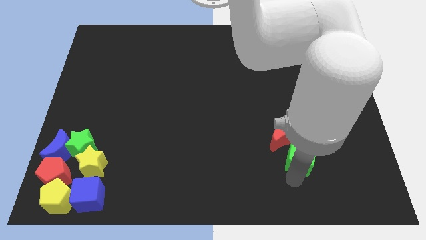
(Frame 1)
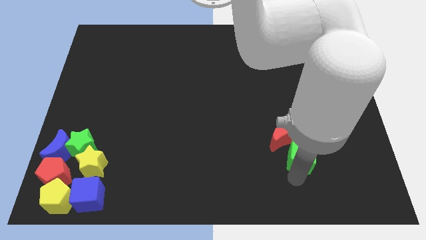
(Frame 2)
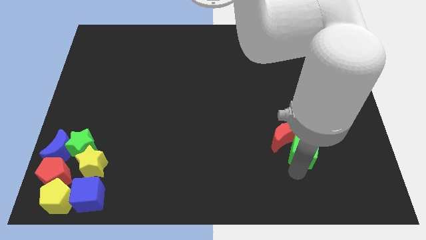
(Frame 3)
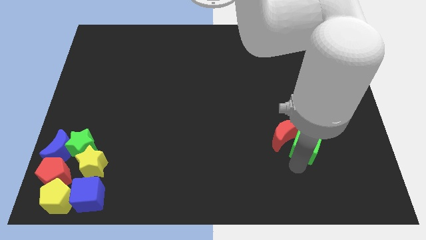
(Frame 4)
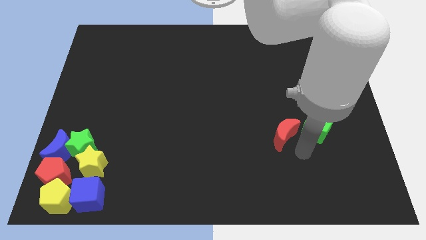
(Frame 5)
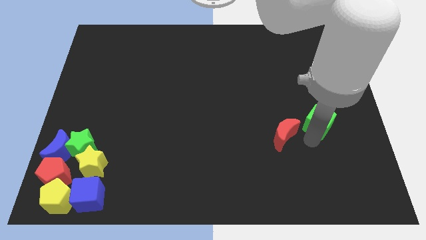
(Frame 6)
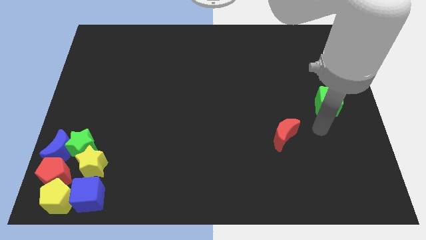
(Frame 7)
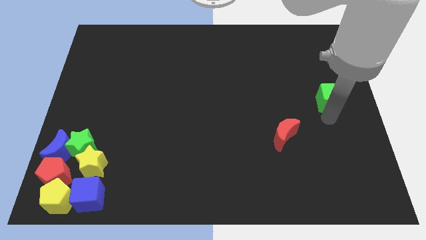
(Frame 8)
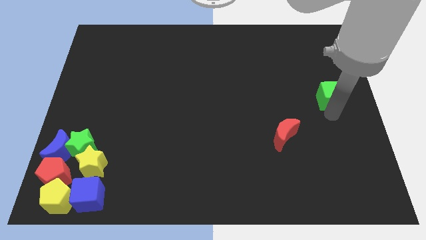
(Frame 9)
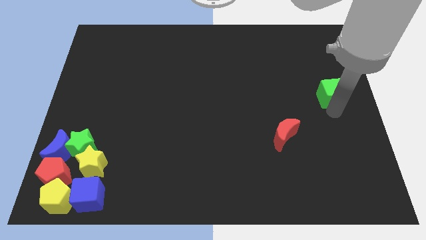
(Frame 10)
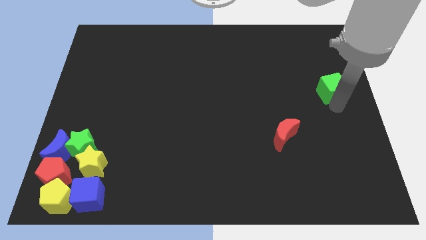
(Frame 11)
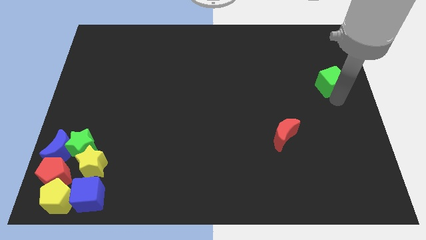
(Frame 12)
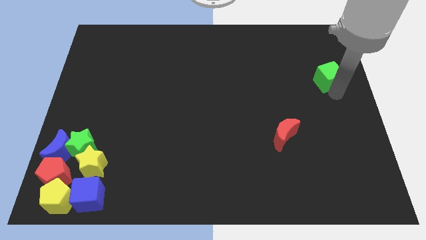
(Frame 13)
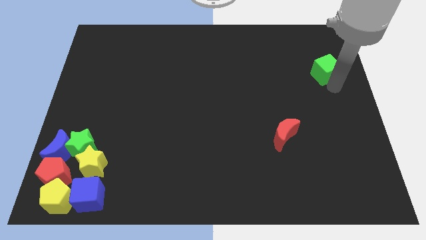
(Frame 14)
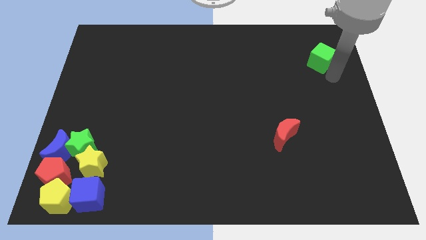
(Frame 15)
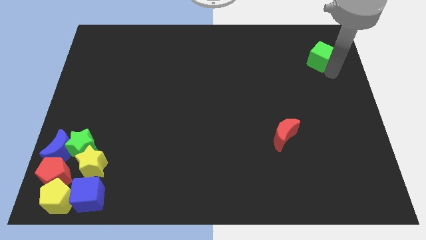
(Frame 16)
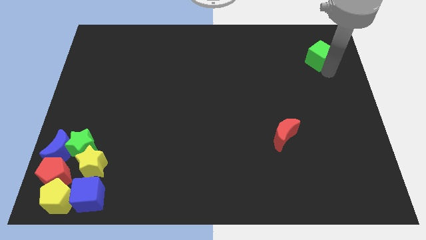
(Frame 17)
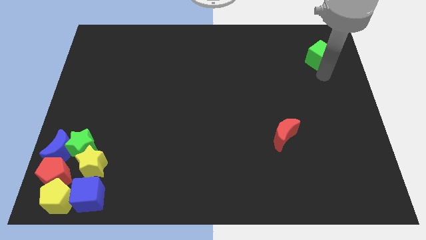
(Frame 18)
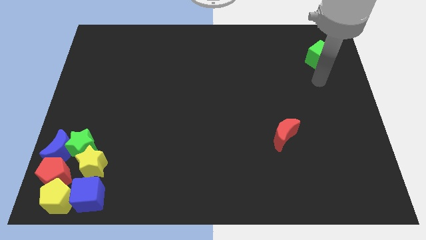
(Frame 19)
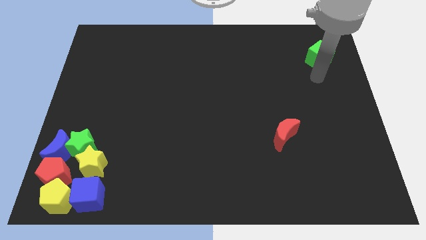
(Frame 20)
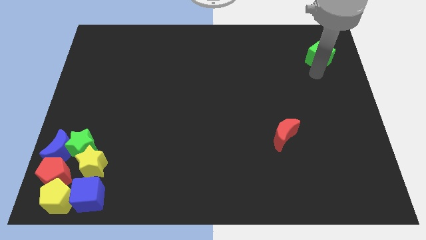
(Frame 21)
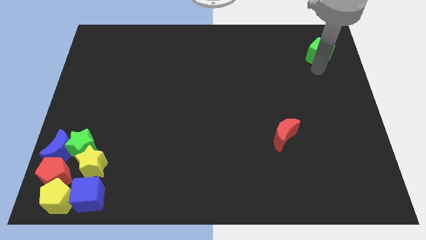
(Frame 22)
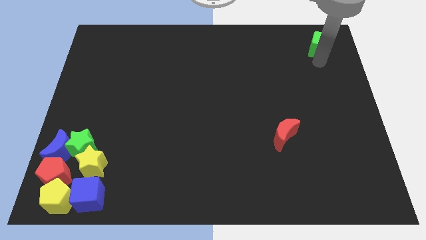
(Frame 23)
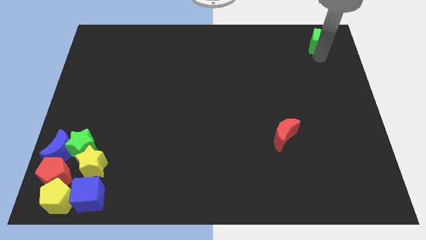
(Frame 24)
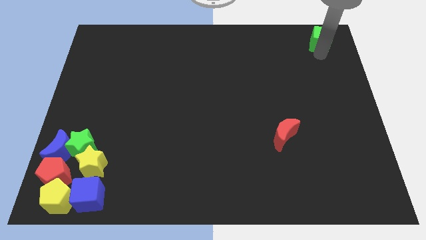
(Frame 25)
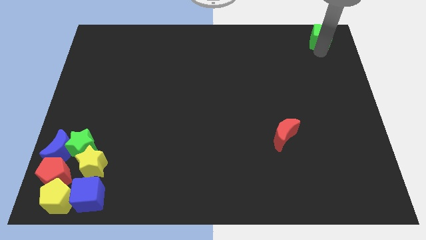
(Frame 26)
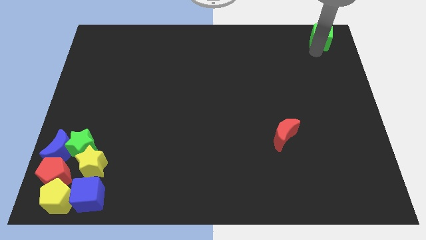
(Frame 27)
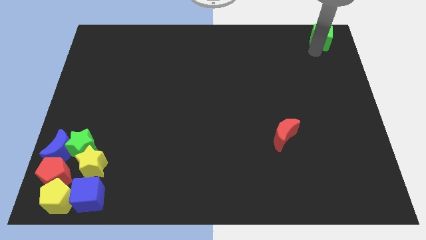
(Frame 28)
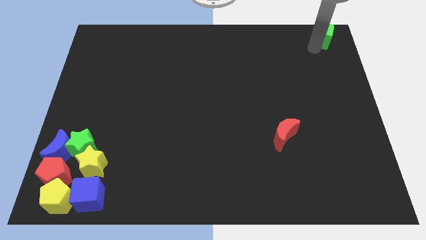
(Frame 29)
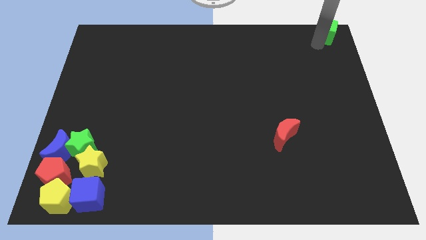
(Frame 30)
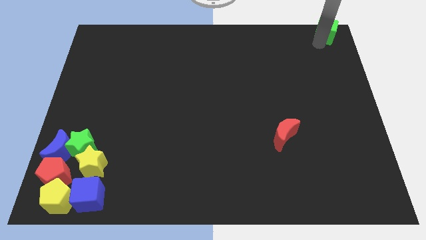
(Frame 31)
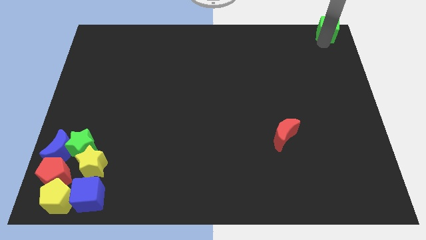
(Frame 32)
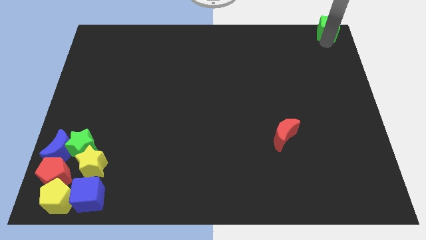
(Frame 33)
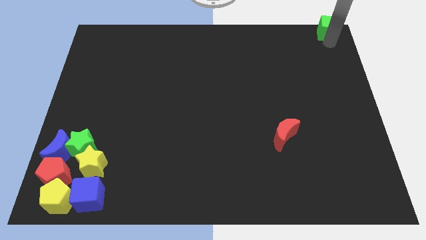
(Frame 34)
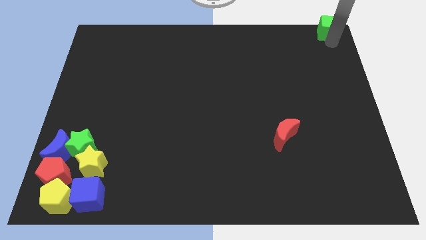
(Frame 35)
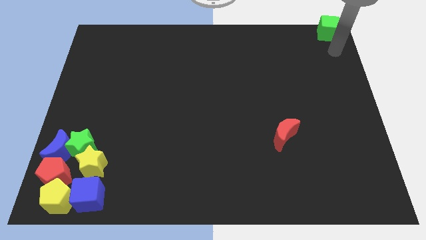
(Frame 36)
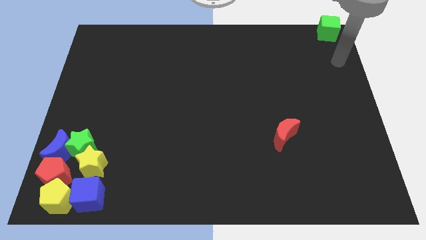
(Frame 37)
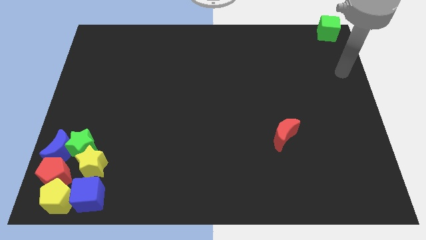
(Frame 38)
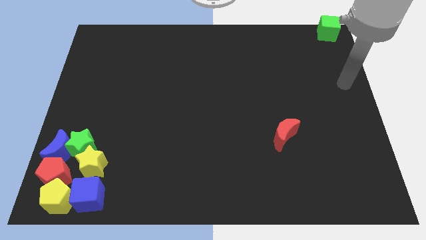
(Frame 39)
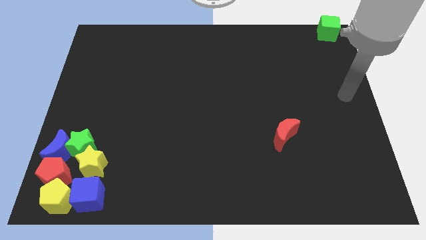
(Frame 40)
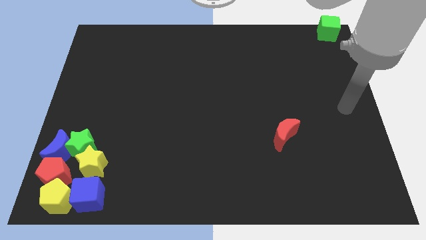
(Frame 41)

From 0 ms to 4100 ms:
push green cube to the top right

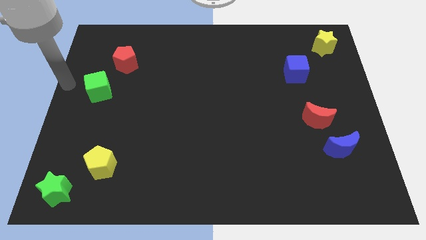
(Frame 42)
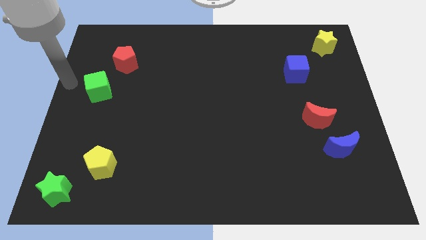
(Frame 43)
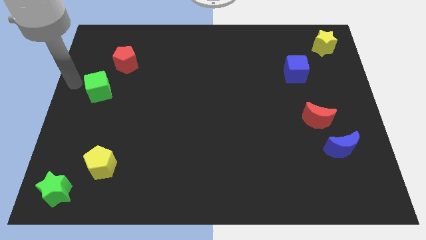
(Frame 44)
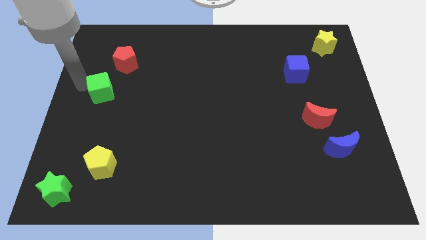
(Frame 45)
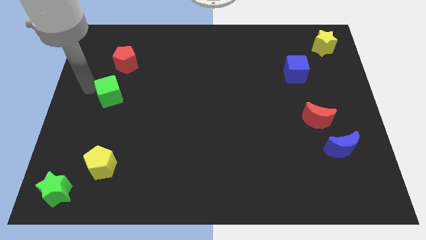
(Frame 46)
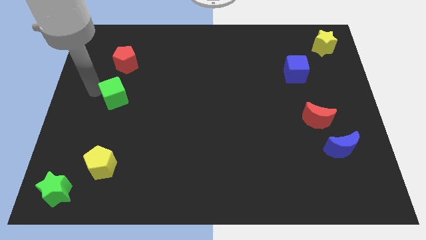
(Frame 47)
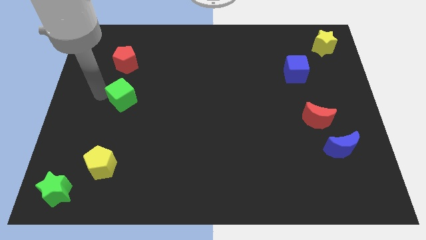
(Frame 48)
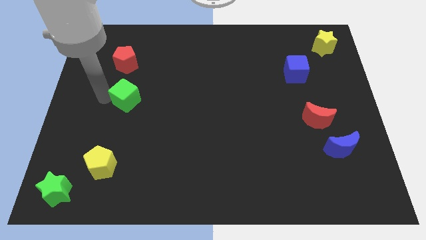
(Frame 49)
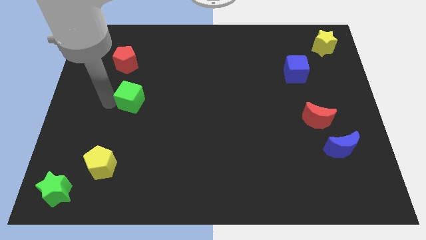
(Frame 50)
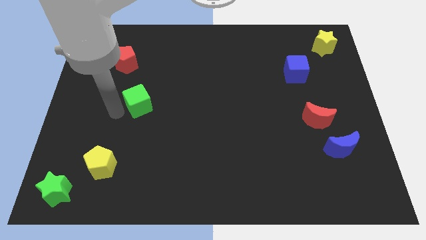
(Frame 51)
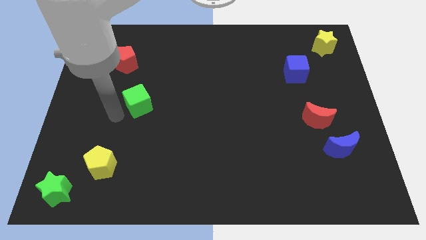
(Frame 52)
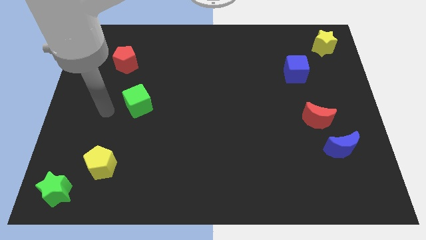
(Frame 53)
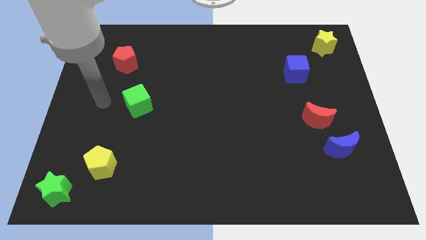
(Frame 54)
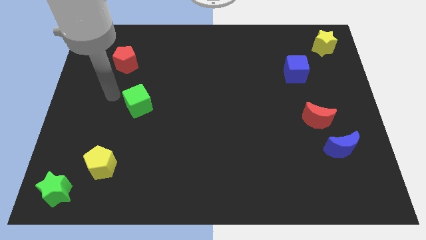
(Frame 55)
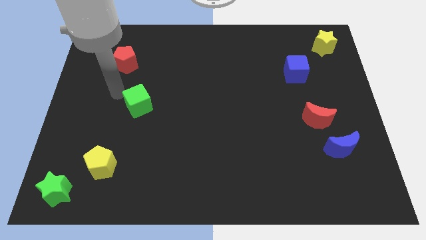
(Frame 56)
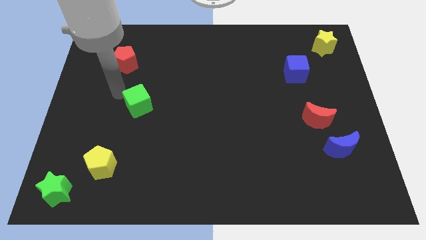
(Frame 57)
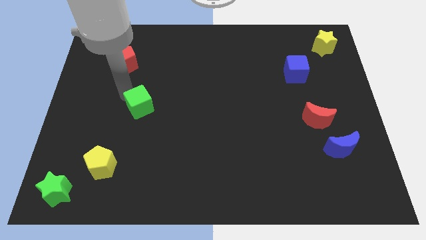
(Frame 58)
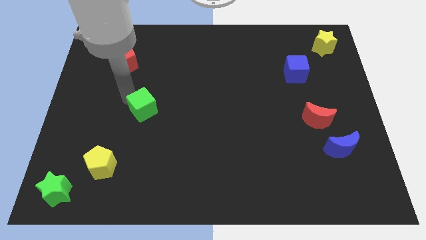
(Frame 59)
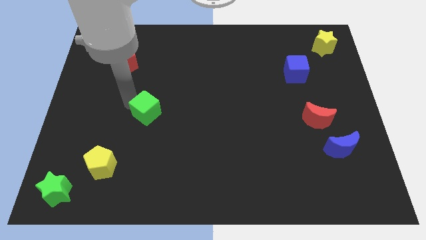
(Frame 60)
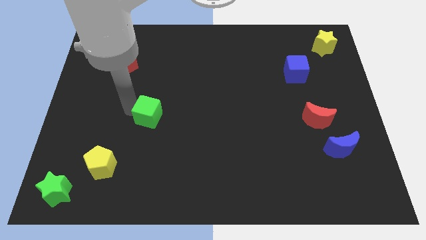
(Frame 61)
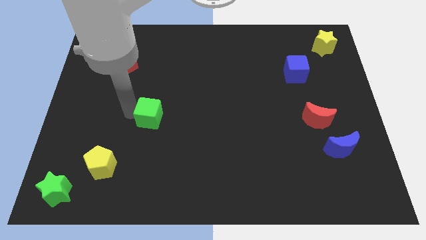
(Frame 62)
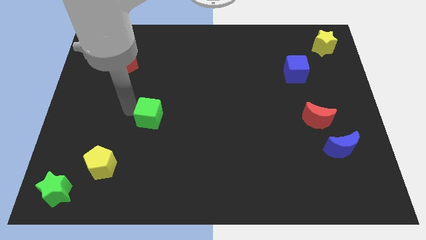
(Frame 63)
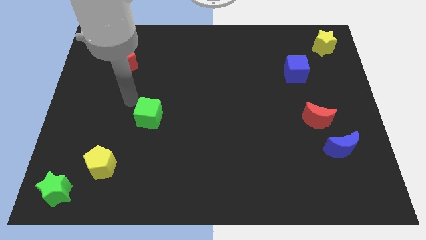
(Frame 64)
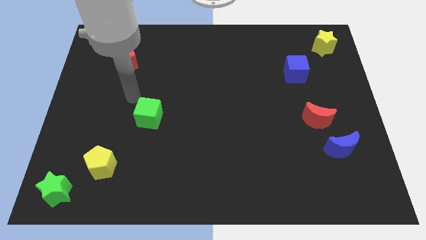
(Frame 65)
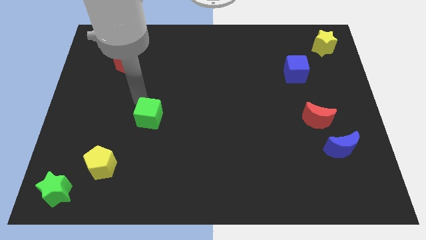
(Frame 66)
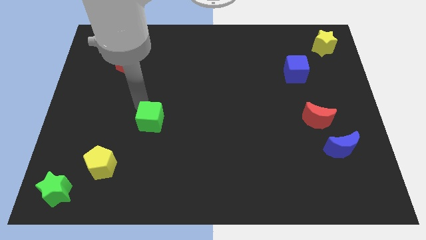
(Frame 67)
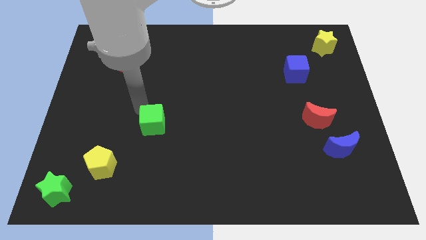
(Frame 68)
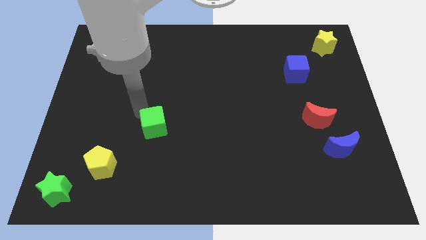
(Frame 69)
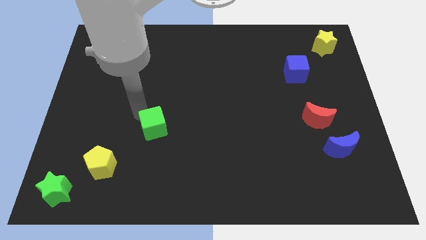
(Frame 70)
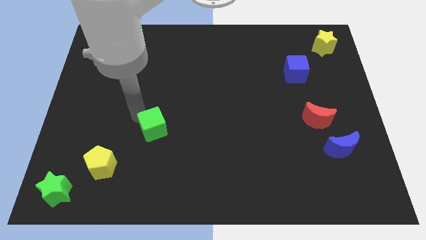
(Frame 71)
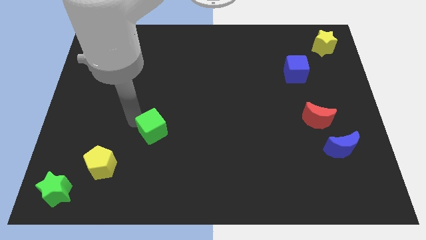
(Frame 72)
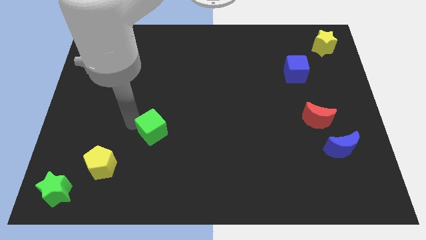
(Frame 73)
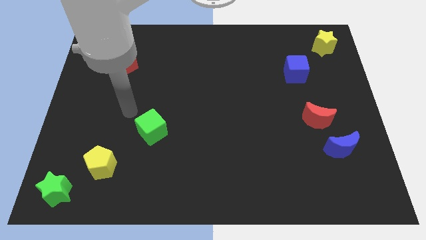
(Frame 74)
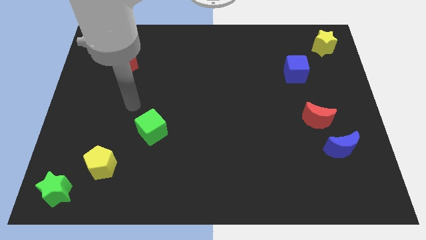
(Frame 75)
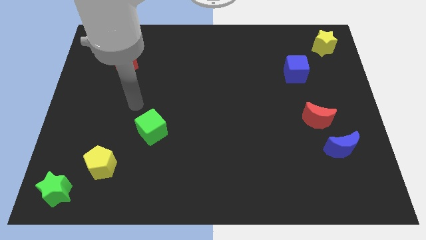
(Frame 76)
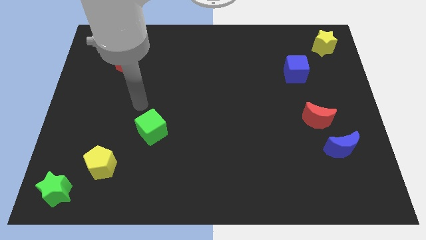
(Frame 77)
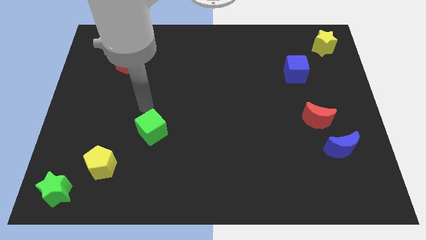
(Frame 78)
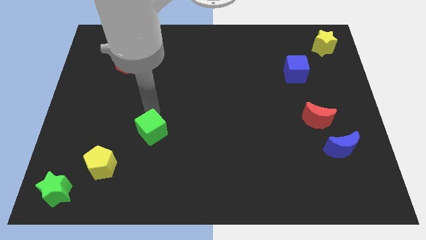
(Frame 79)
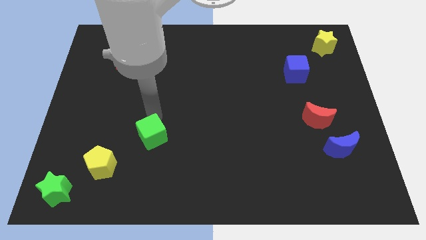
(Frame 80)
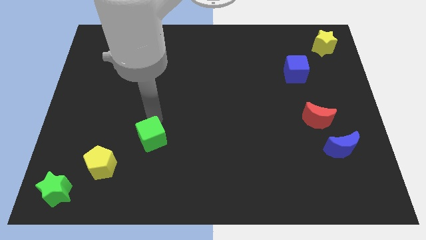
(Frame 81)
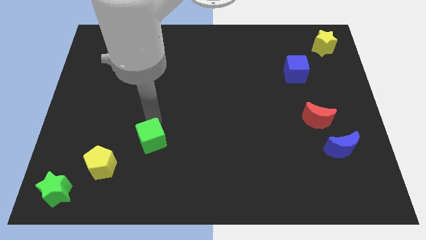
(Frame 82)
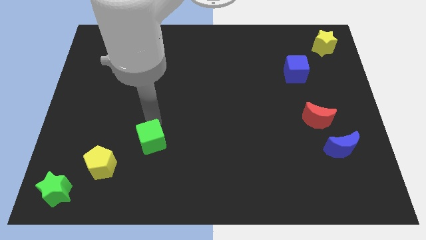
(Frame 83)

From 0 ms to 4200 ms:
place the green cube diagonally to yellow pentagon

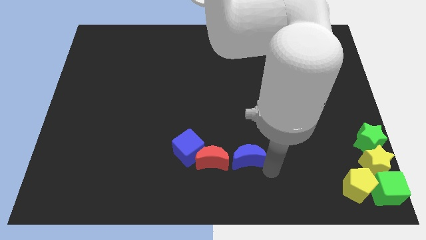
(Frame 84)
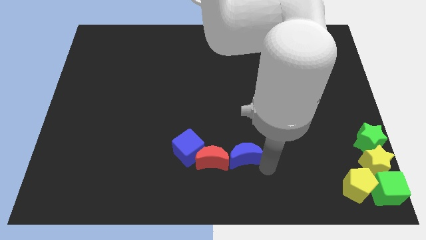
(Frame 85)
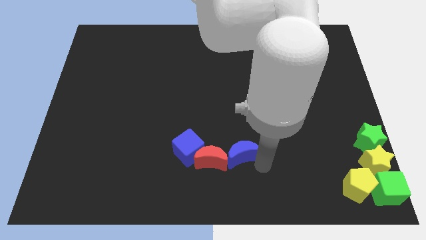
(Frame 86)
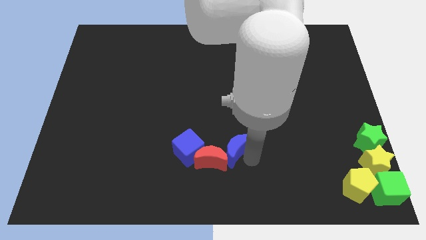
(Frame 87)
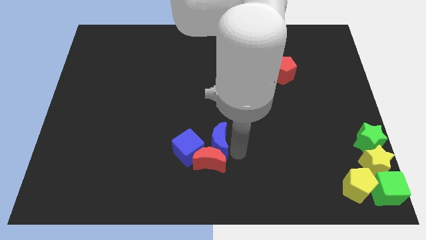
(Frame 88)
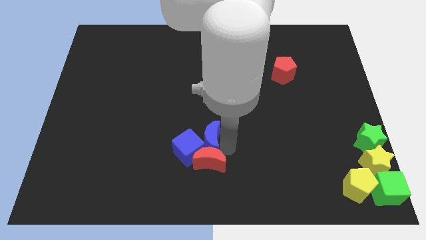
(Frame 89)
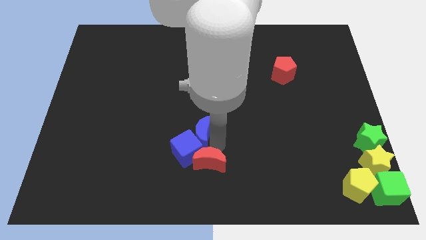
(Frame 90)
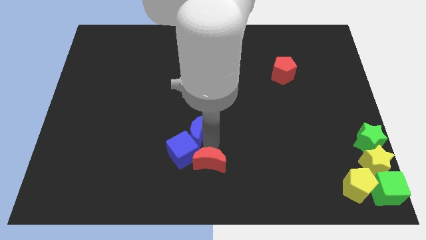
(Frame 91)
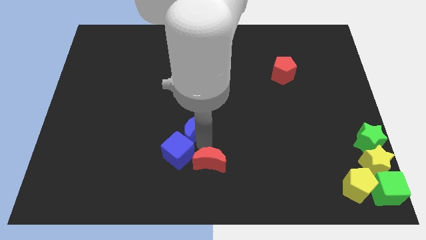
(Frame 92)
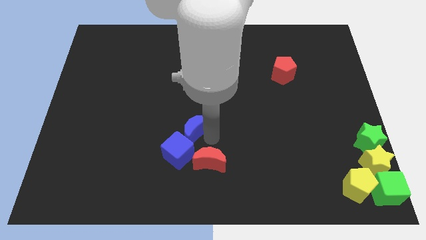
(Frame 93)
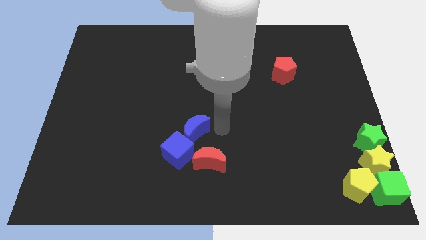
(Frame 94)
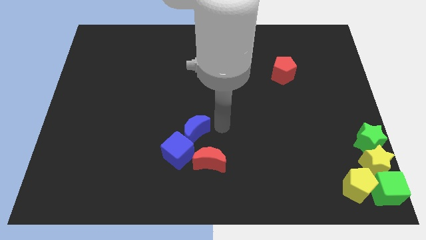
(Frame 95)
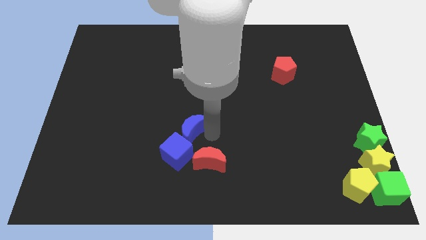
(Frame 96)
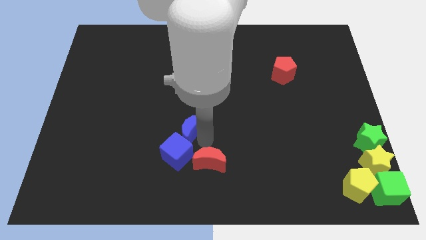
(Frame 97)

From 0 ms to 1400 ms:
put the blue moon to the top right side of the blue cube
